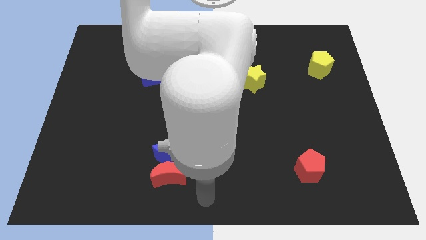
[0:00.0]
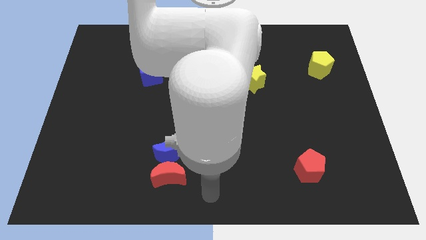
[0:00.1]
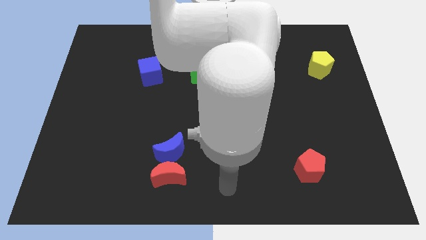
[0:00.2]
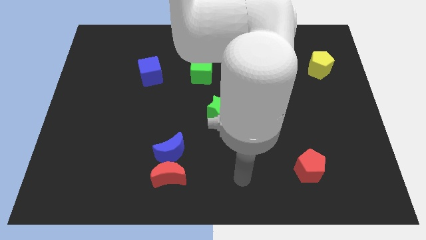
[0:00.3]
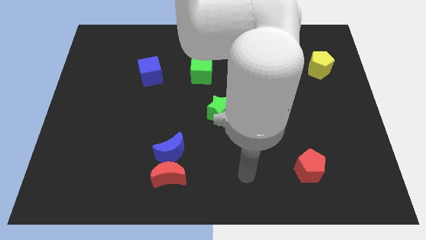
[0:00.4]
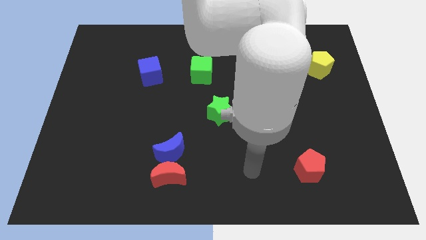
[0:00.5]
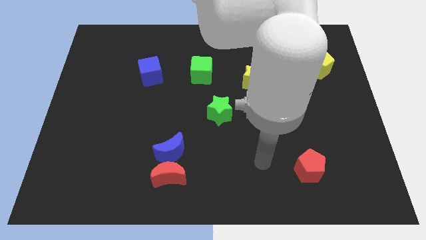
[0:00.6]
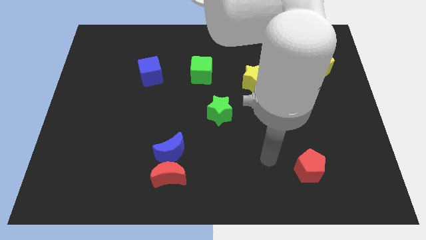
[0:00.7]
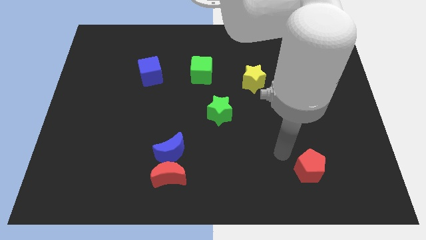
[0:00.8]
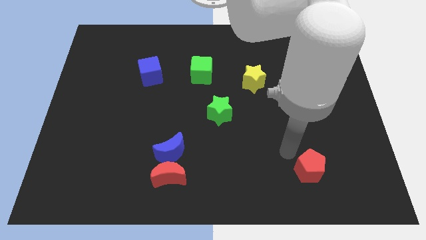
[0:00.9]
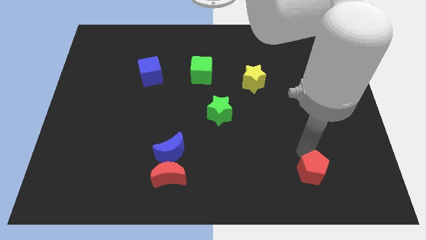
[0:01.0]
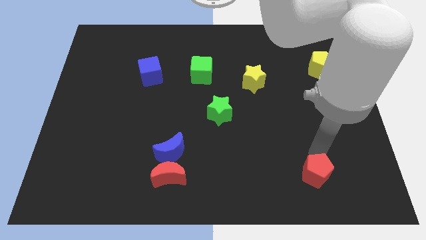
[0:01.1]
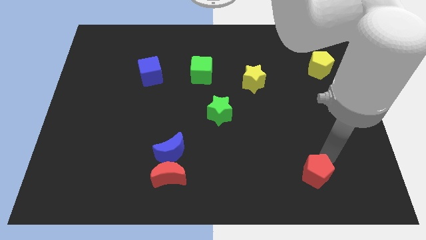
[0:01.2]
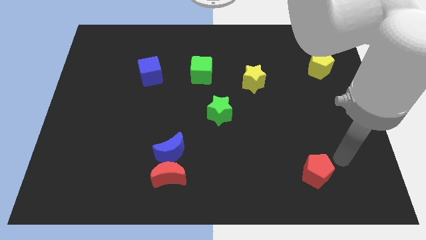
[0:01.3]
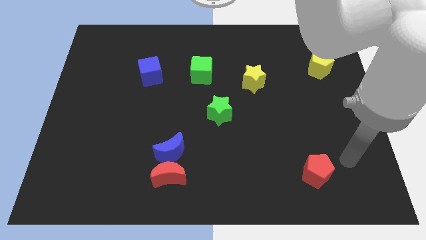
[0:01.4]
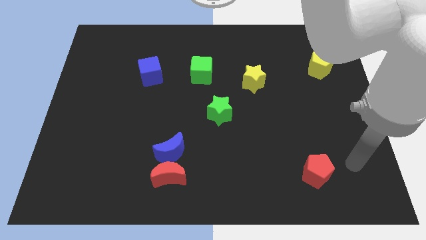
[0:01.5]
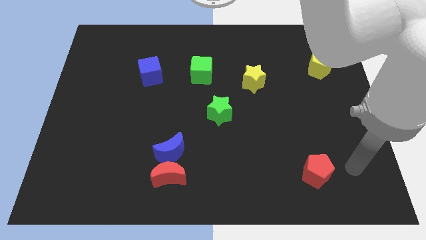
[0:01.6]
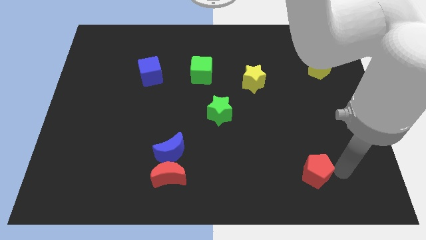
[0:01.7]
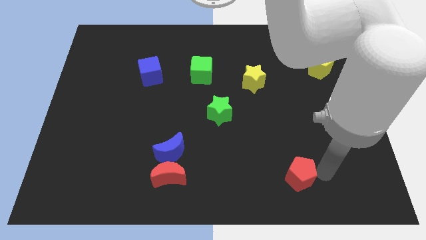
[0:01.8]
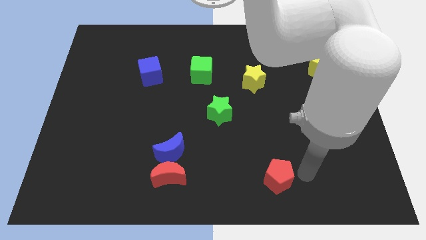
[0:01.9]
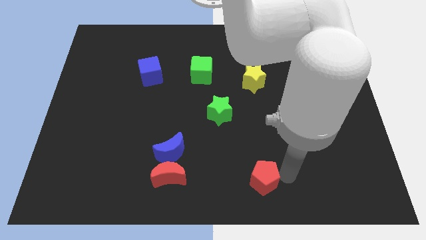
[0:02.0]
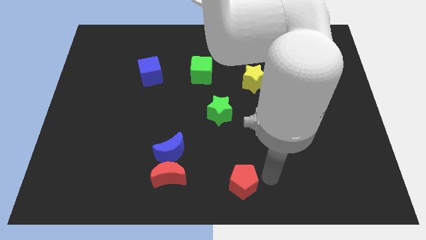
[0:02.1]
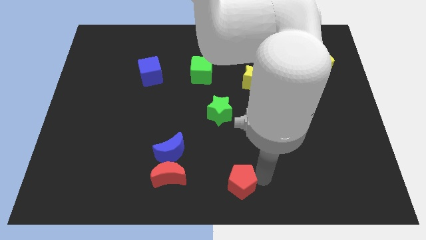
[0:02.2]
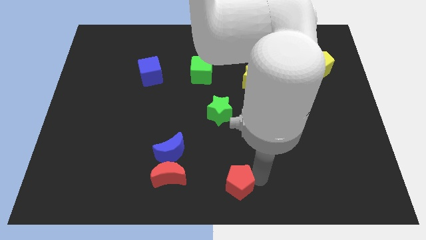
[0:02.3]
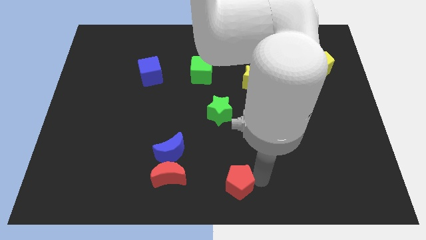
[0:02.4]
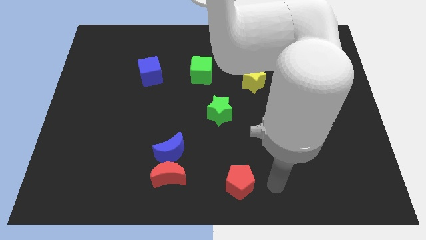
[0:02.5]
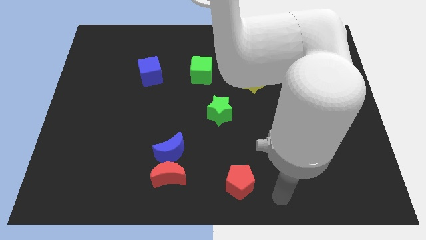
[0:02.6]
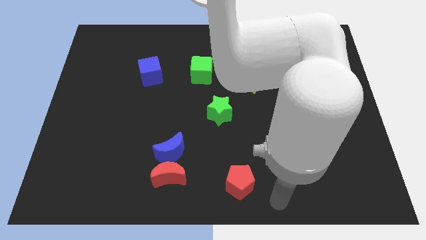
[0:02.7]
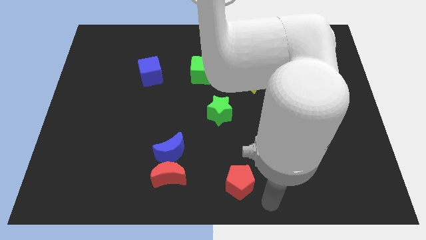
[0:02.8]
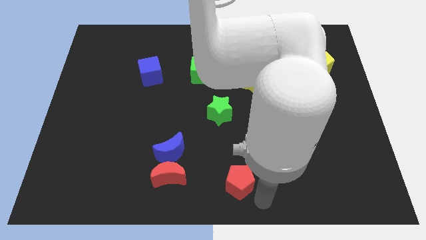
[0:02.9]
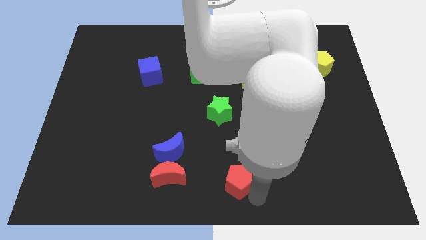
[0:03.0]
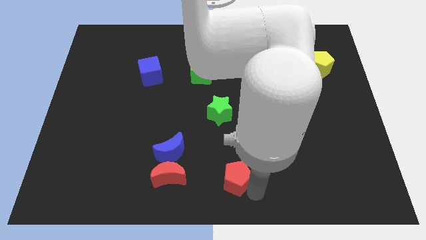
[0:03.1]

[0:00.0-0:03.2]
move red pentagon to the right of red moon

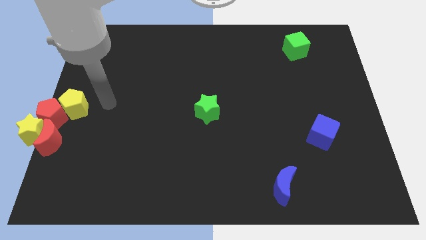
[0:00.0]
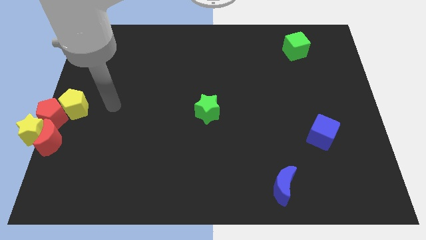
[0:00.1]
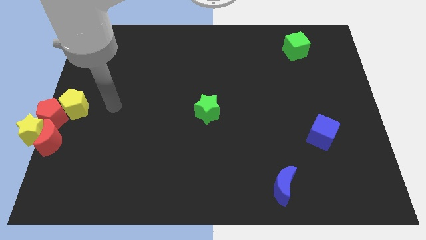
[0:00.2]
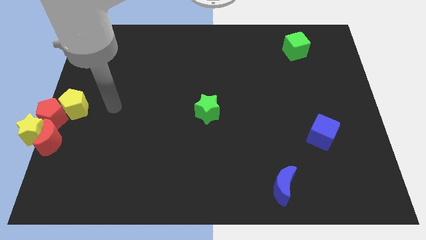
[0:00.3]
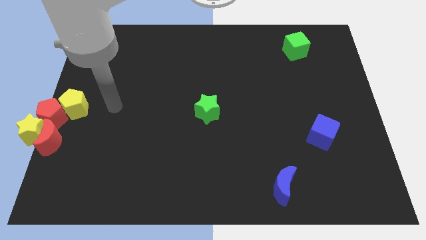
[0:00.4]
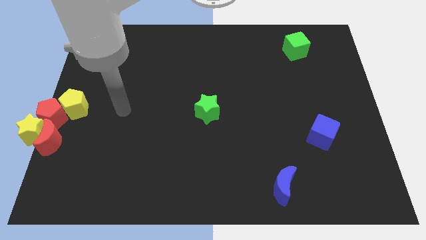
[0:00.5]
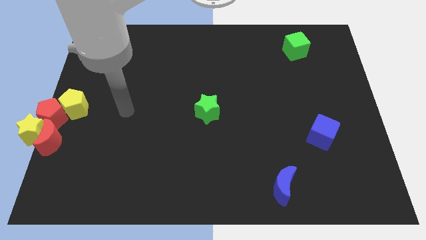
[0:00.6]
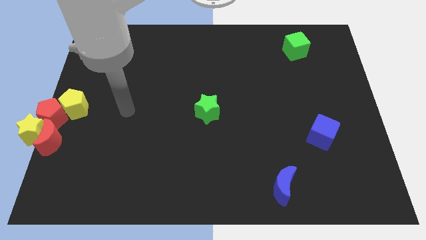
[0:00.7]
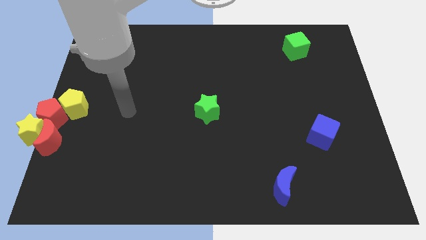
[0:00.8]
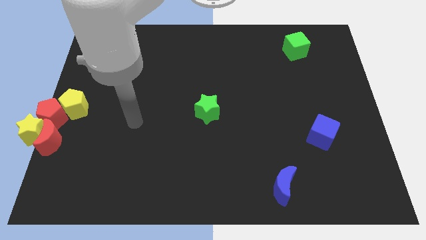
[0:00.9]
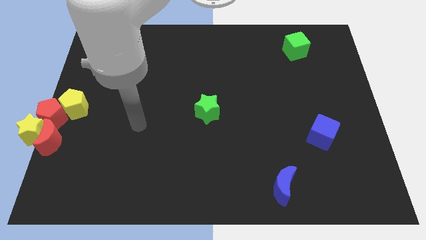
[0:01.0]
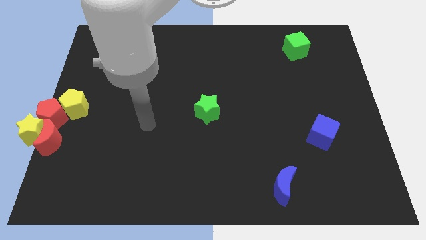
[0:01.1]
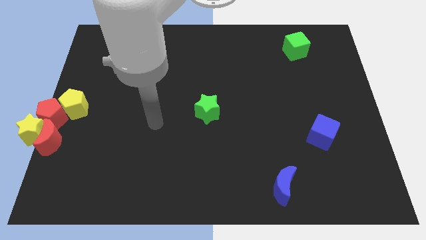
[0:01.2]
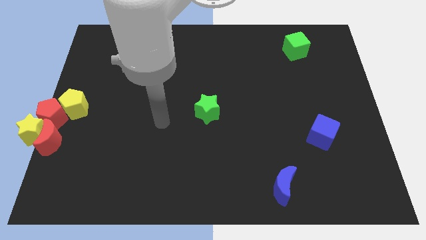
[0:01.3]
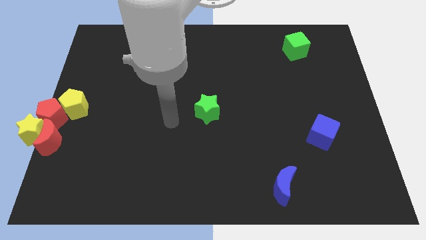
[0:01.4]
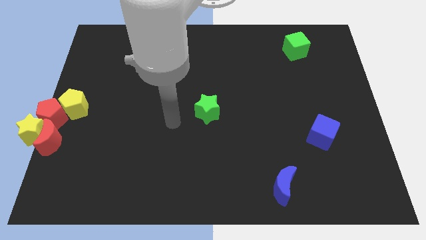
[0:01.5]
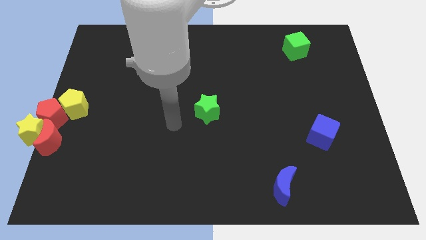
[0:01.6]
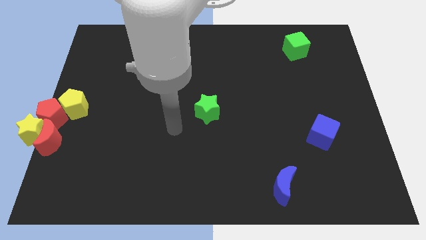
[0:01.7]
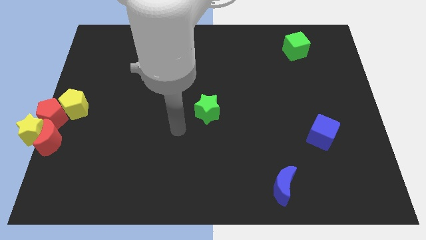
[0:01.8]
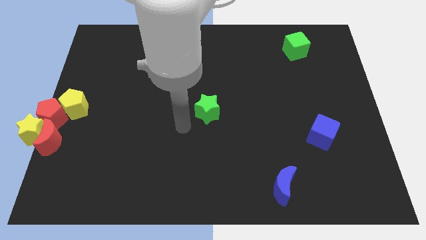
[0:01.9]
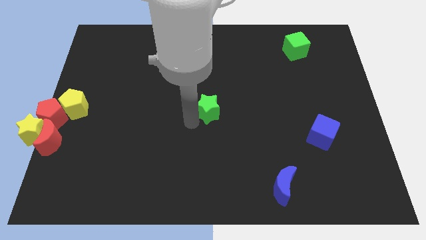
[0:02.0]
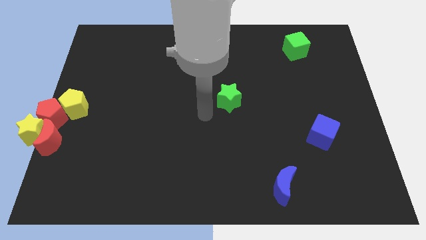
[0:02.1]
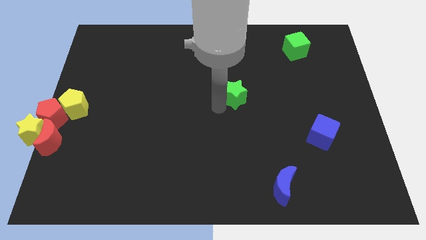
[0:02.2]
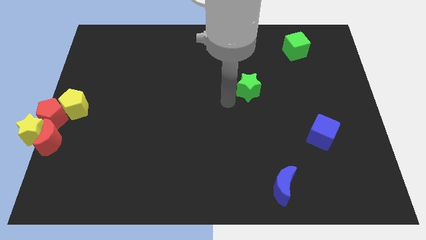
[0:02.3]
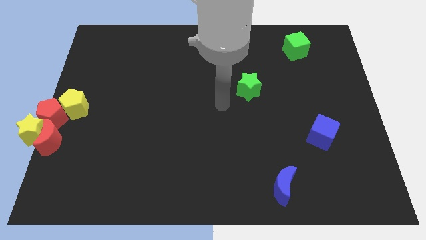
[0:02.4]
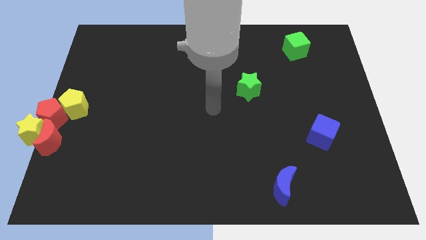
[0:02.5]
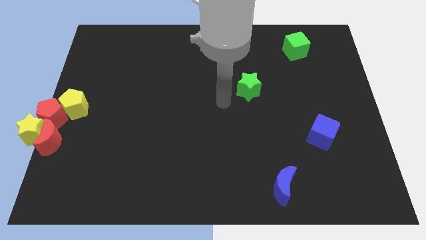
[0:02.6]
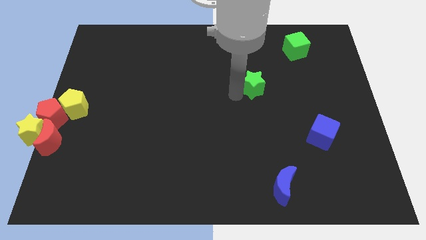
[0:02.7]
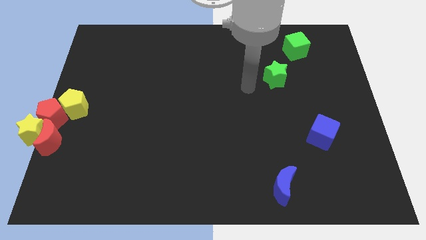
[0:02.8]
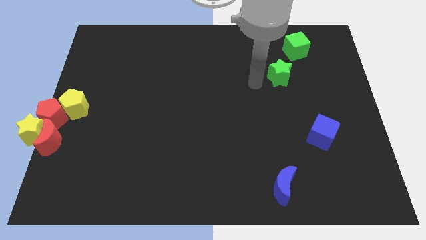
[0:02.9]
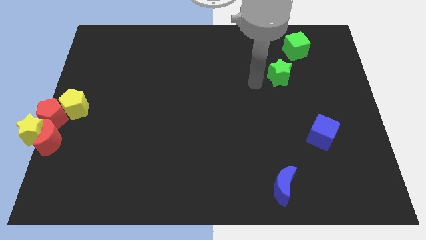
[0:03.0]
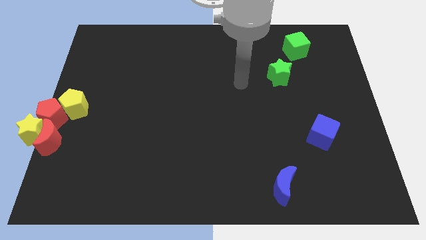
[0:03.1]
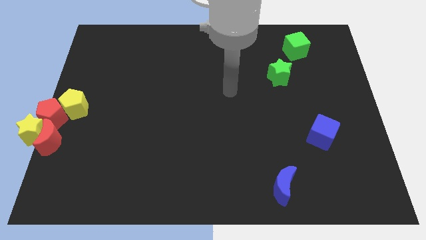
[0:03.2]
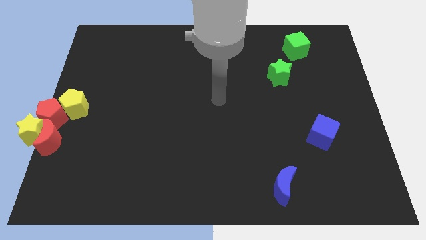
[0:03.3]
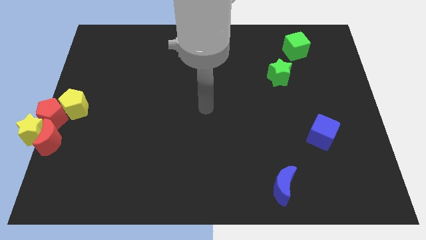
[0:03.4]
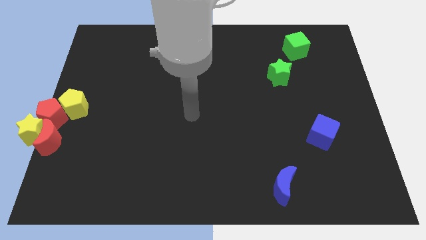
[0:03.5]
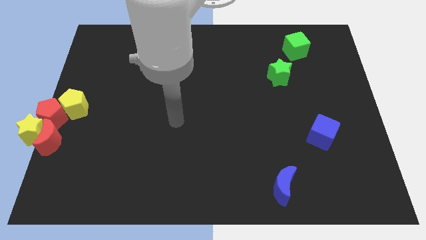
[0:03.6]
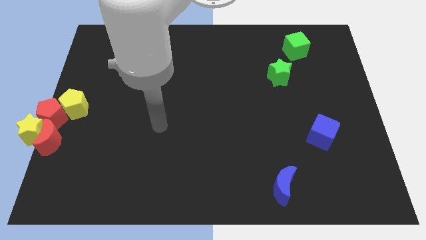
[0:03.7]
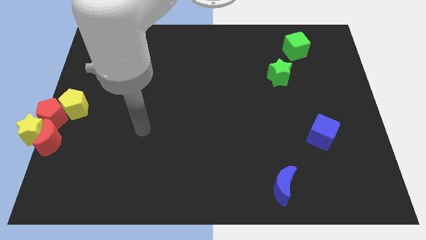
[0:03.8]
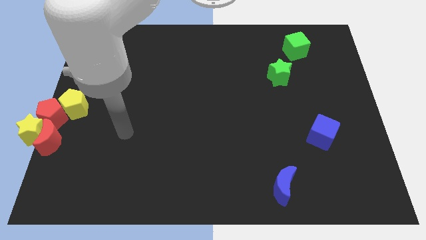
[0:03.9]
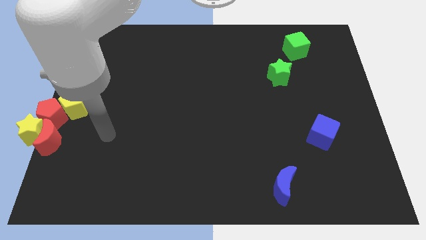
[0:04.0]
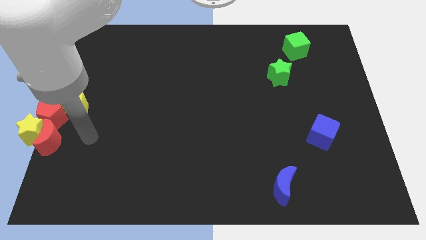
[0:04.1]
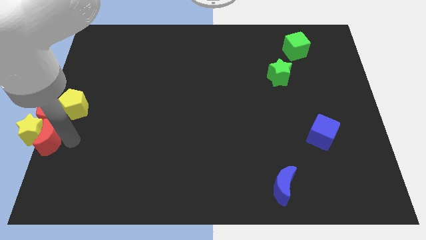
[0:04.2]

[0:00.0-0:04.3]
push the green star towards the right side of the board

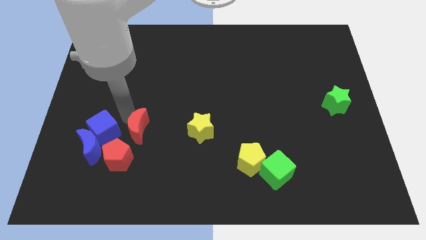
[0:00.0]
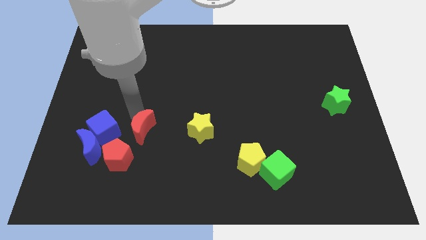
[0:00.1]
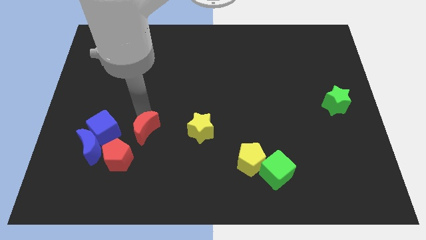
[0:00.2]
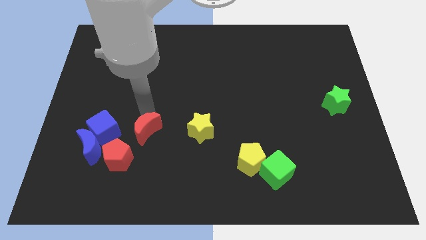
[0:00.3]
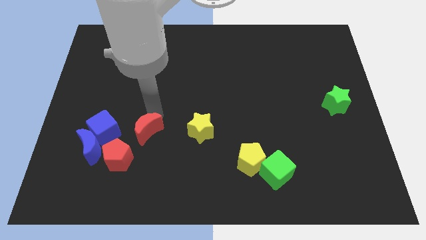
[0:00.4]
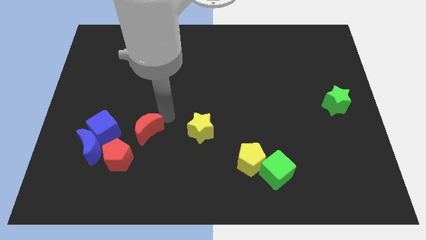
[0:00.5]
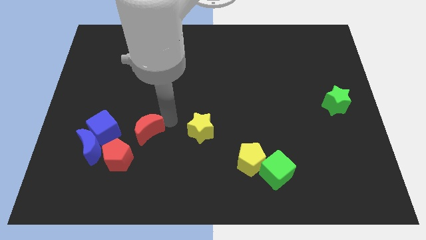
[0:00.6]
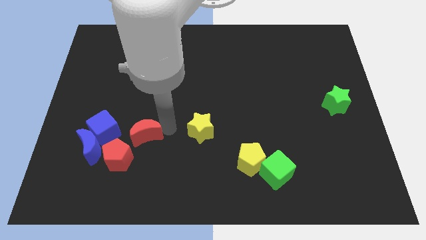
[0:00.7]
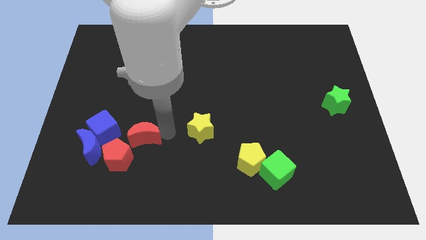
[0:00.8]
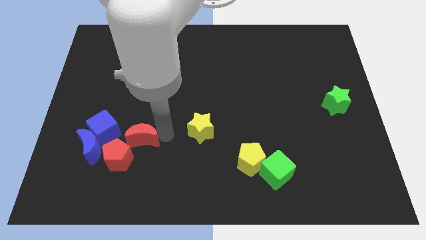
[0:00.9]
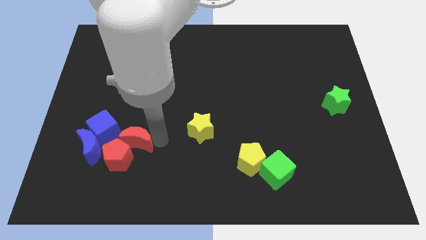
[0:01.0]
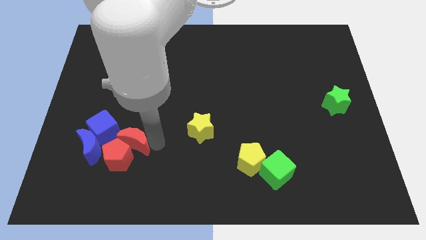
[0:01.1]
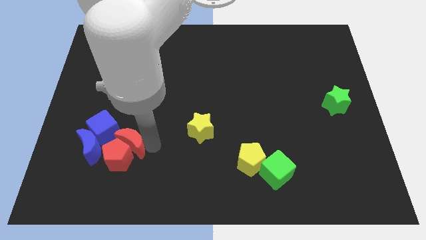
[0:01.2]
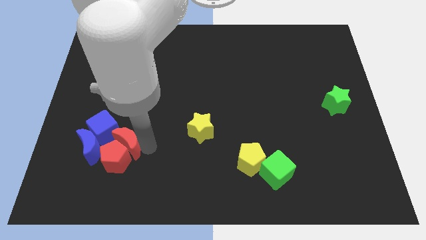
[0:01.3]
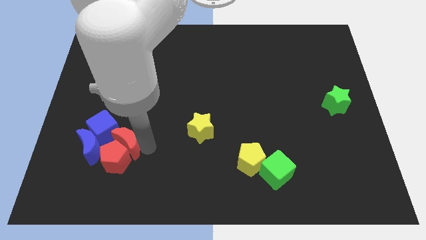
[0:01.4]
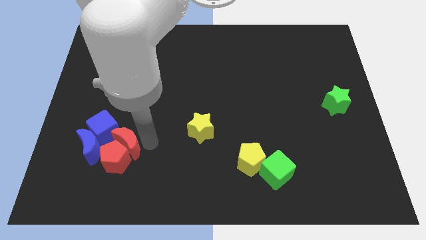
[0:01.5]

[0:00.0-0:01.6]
push the red crescent into the red pentagon
